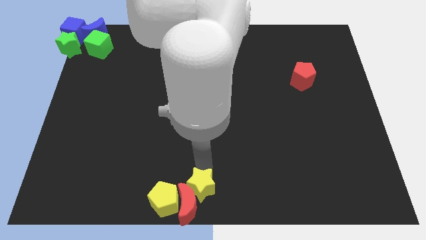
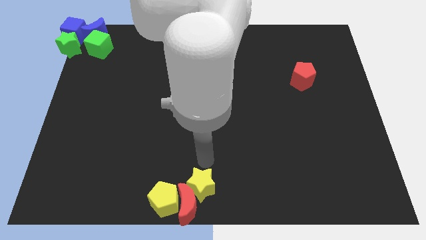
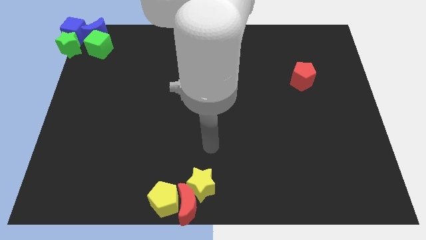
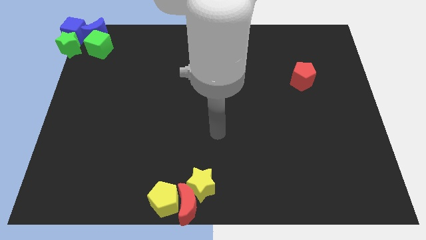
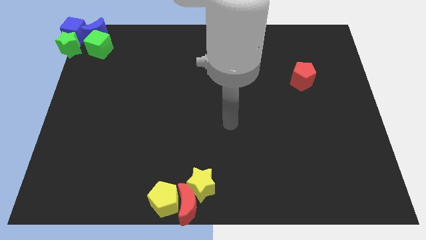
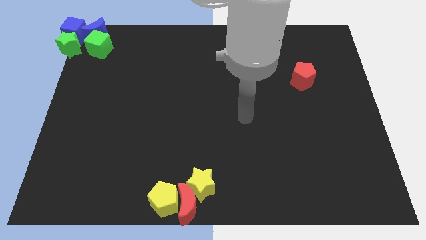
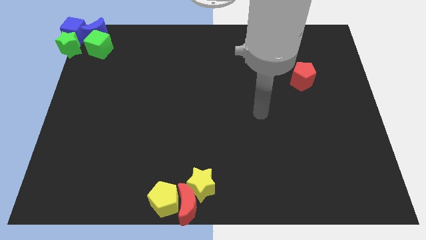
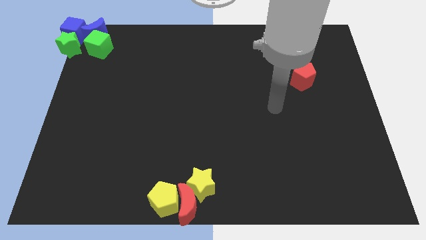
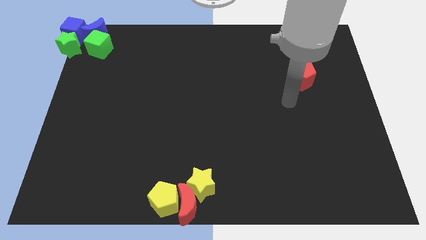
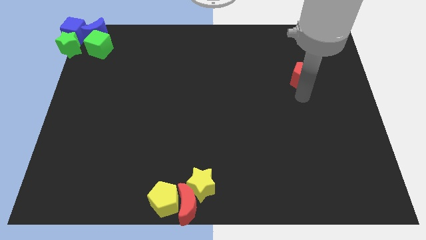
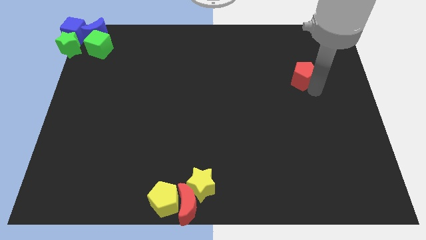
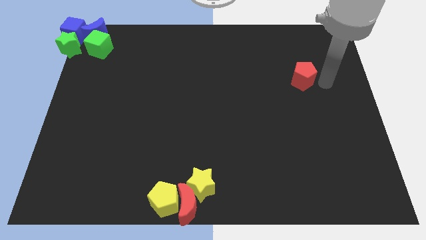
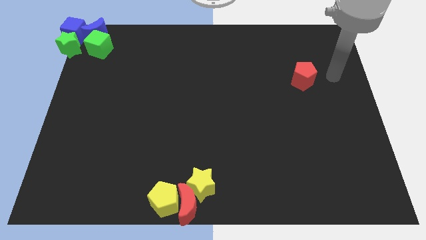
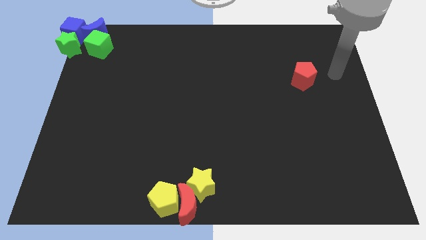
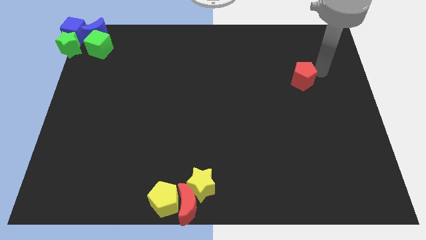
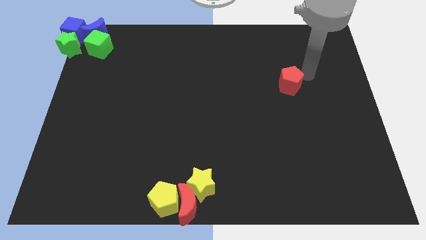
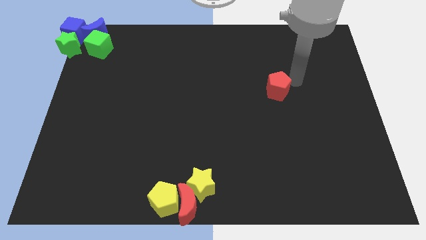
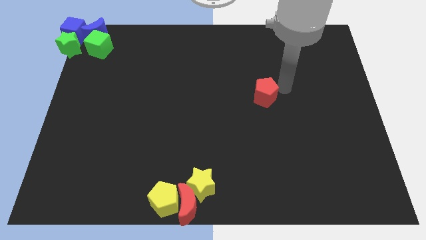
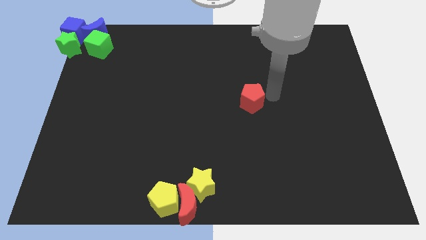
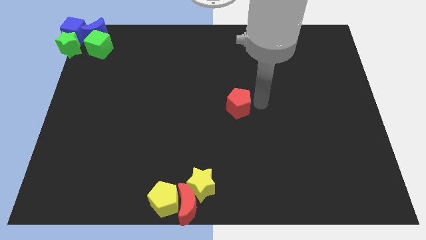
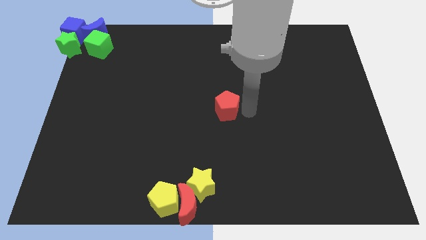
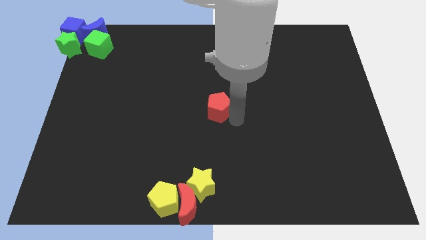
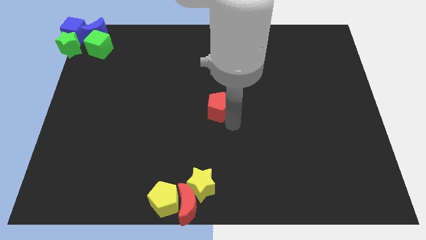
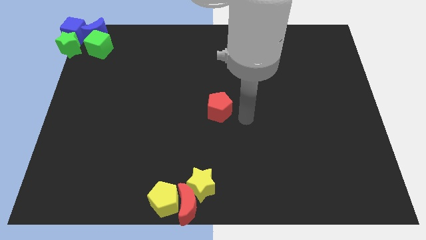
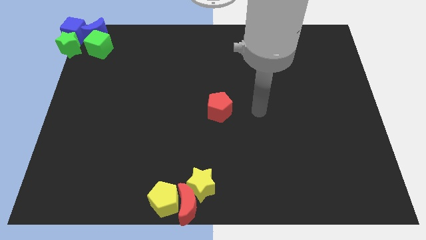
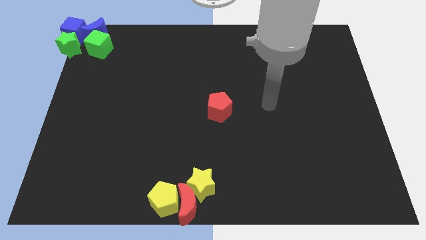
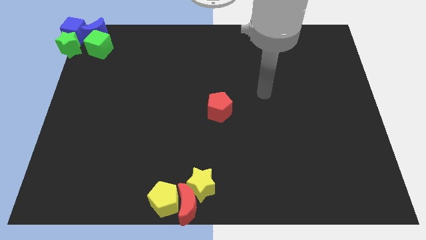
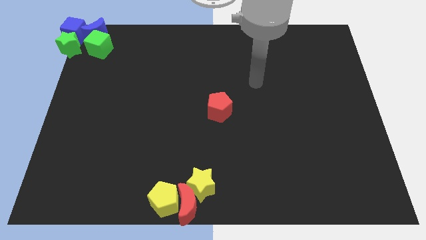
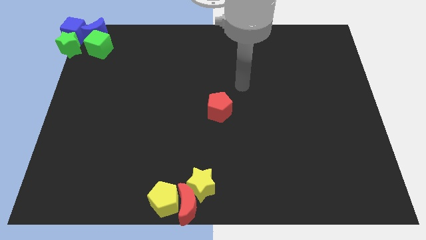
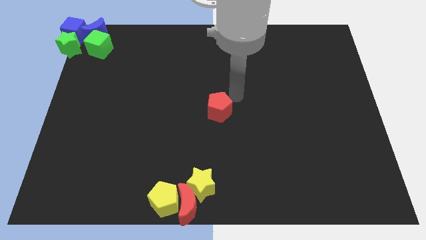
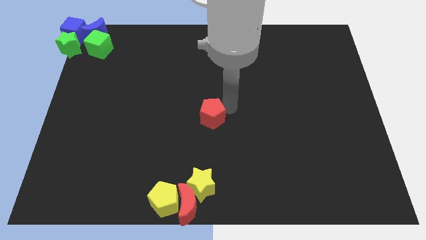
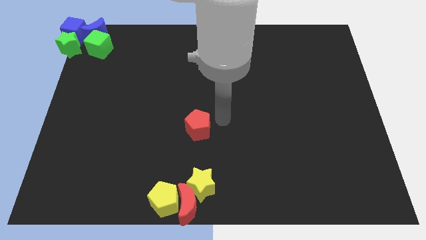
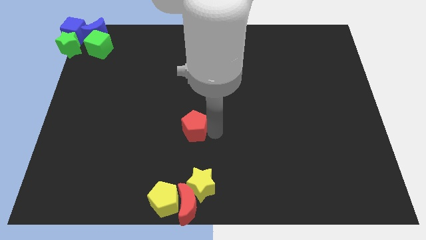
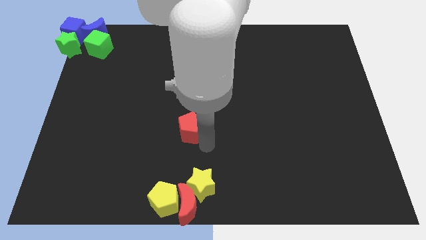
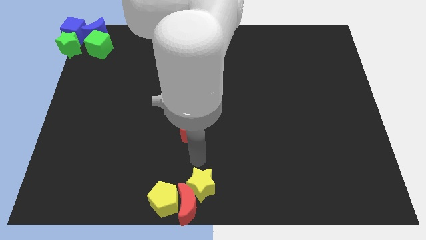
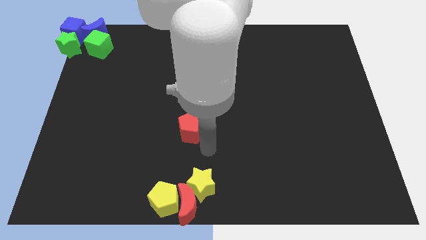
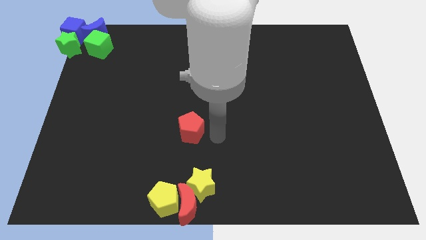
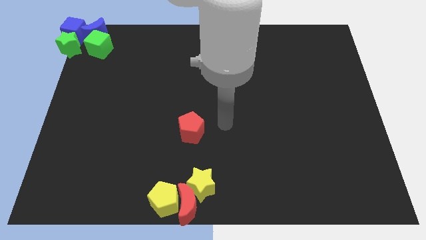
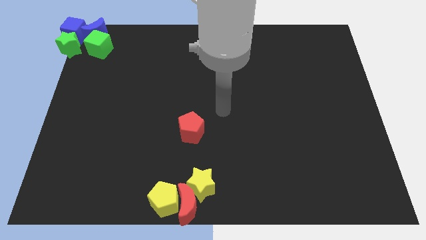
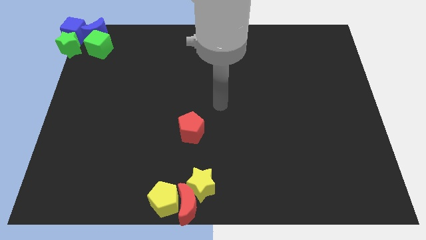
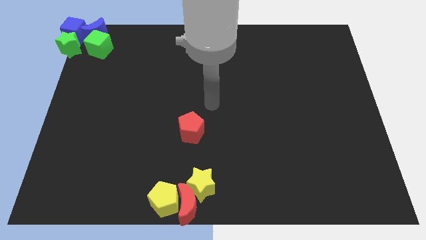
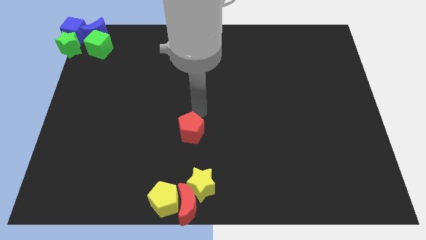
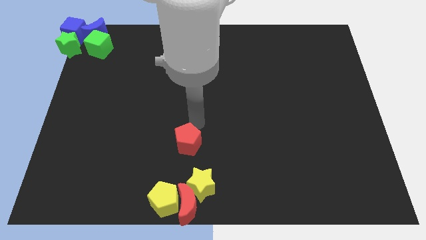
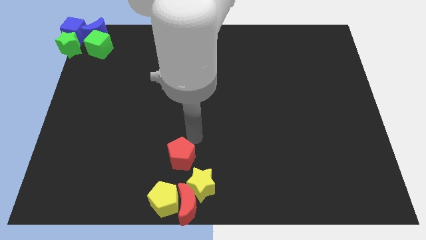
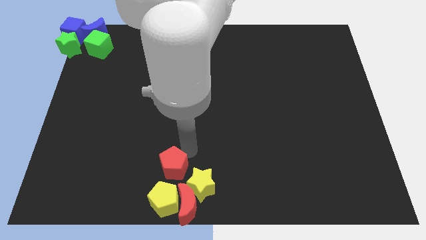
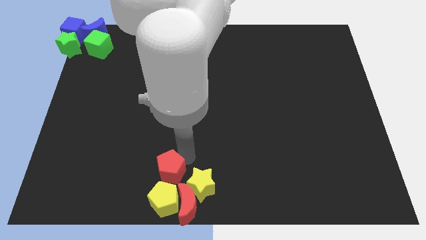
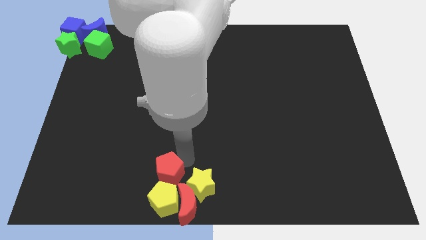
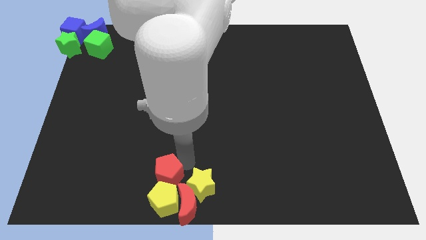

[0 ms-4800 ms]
place the red pentagon at the top of yellow pentagon

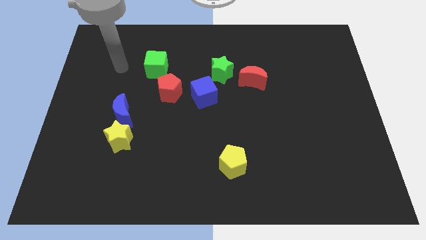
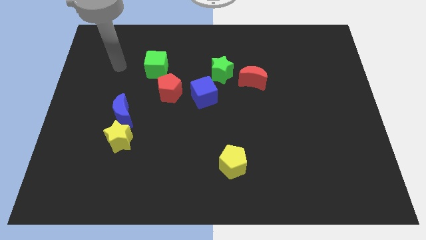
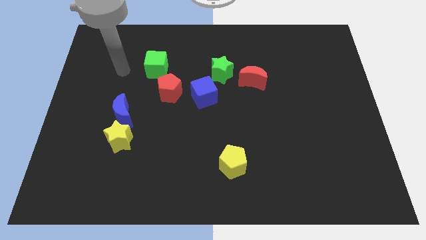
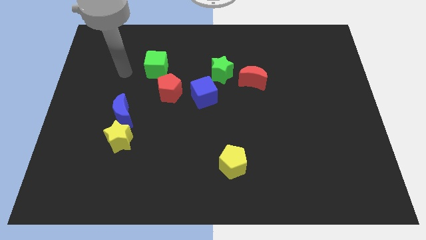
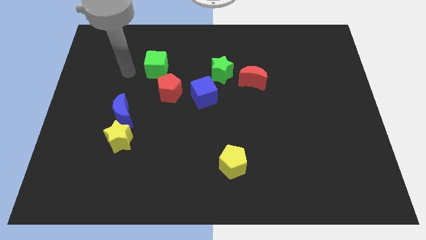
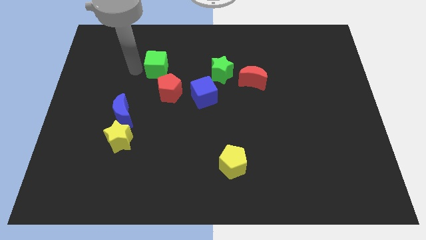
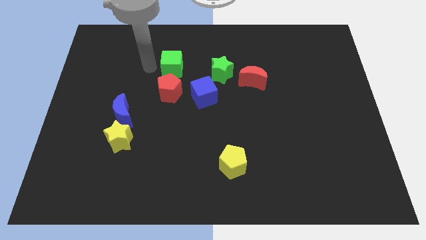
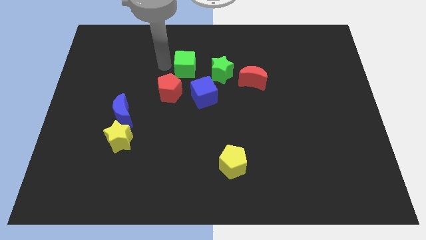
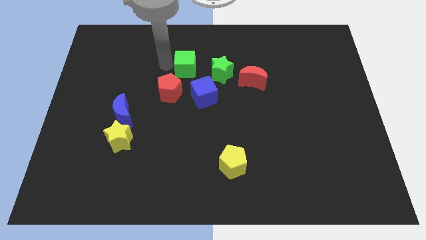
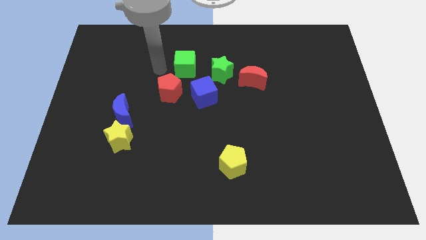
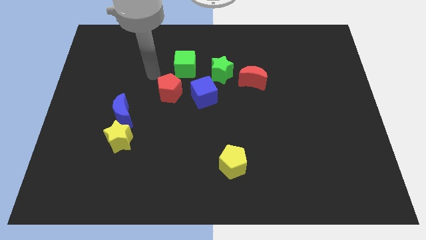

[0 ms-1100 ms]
push the green cube towards the green star

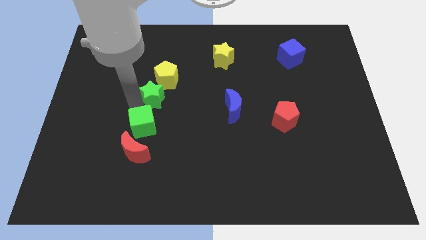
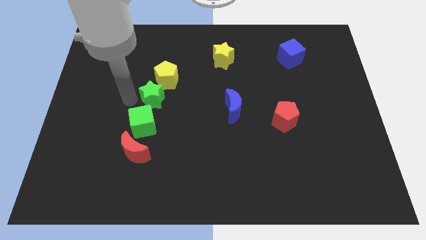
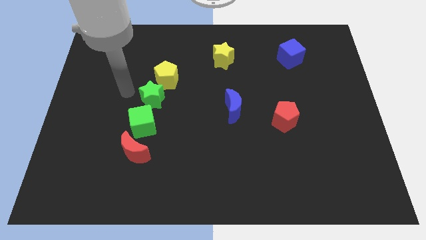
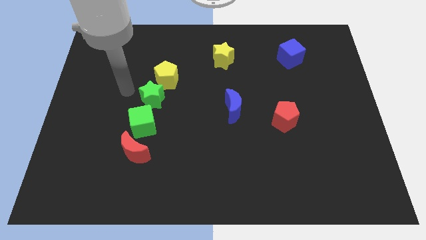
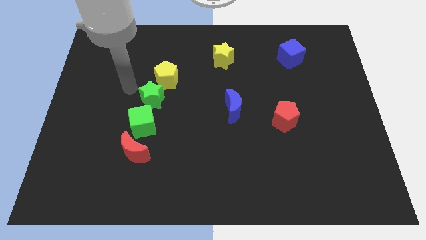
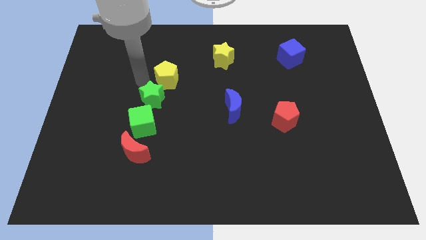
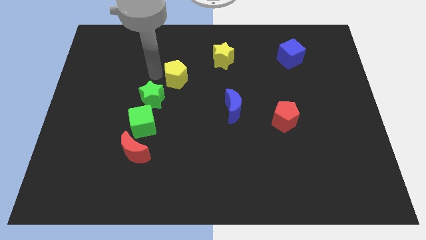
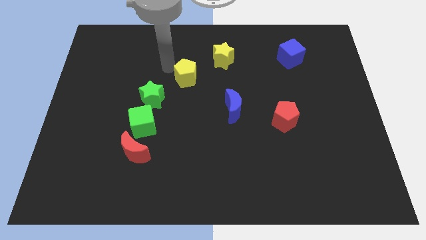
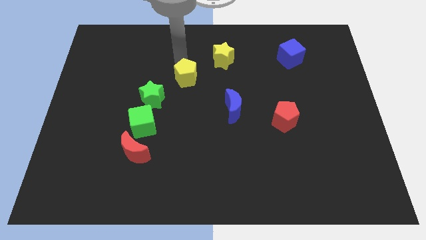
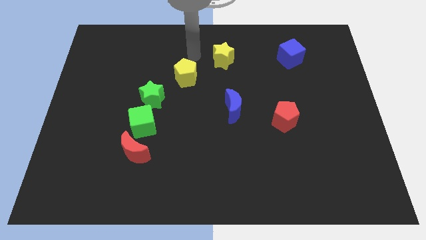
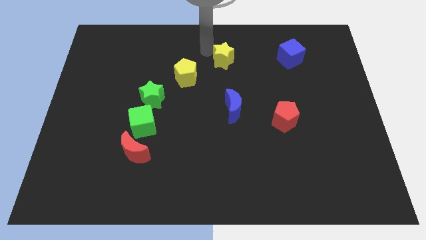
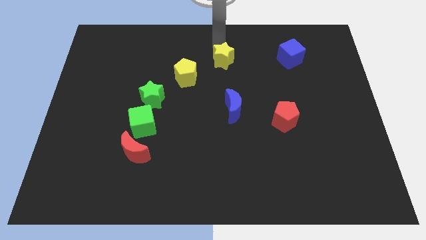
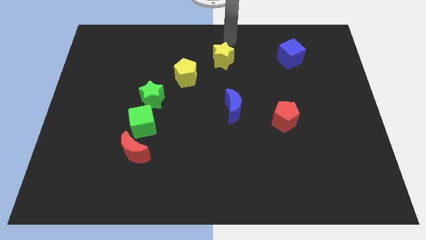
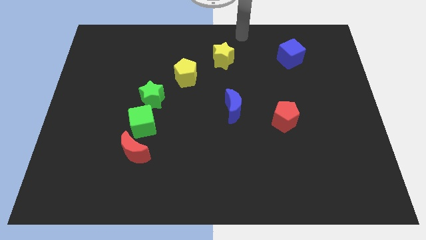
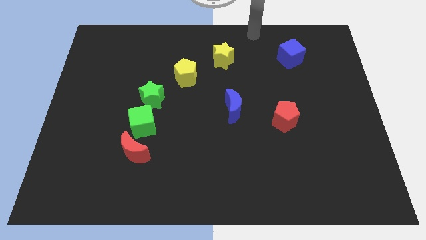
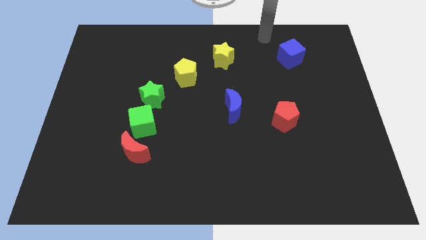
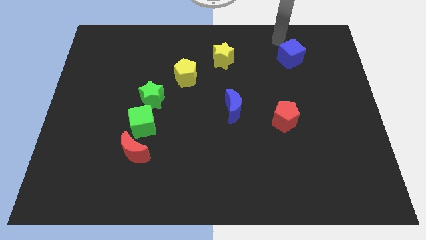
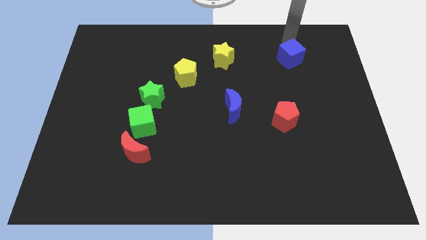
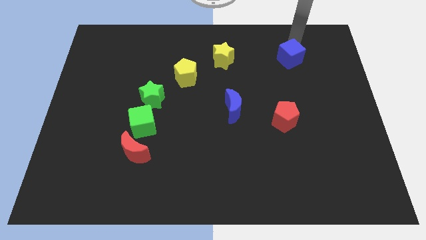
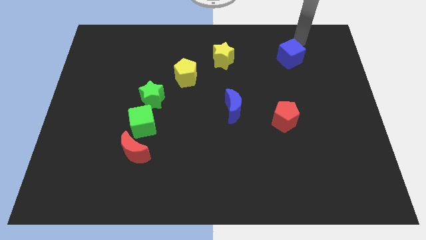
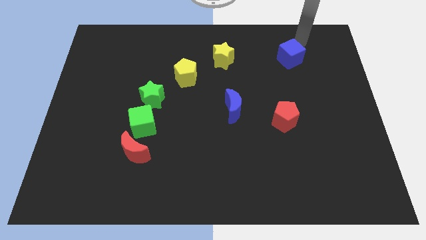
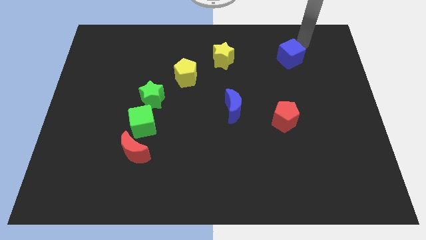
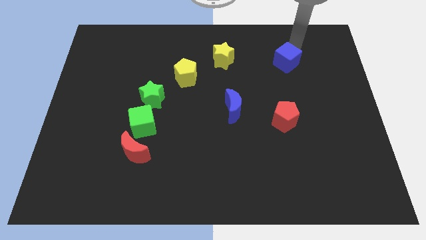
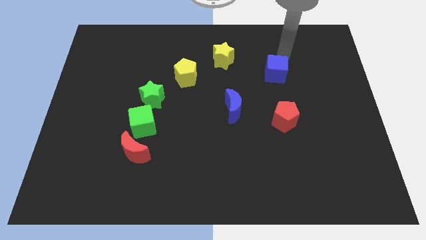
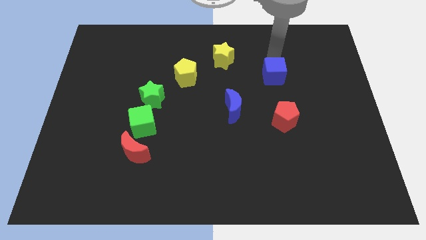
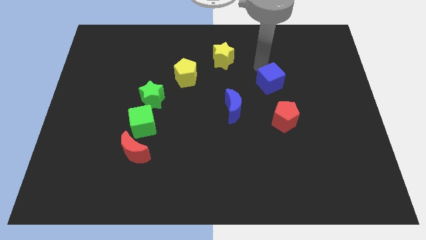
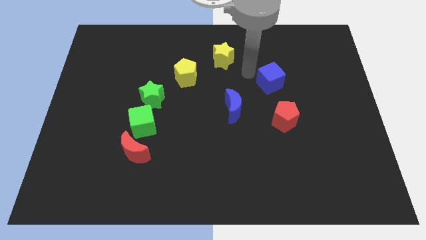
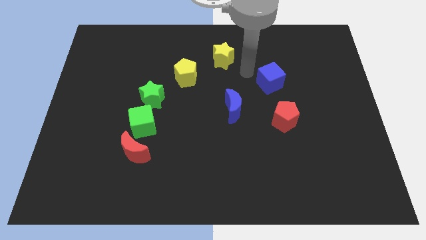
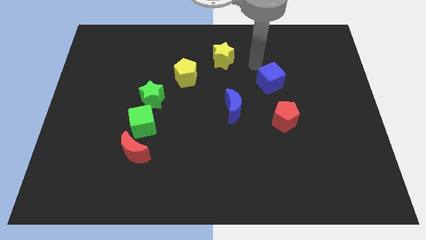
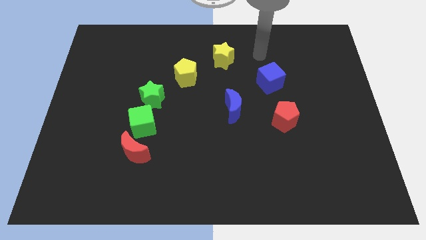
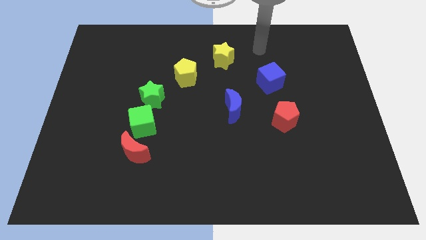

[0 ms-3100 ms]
move blue cube slightly down
